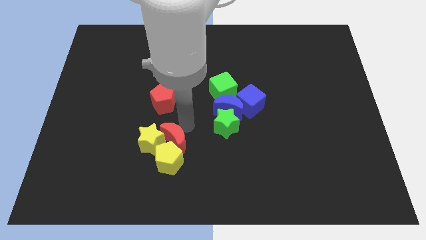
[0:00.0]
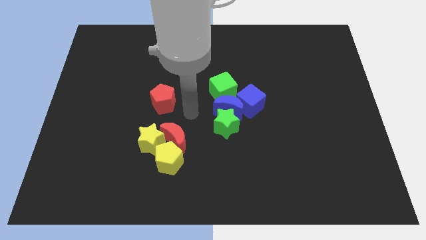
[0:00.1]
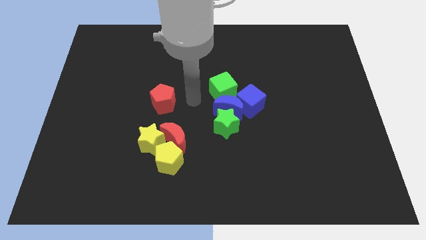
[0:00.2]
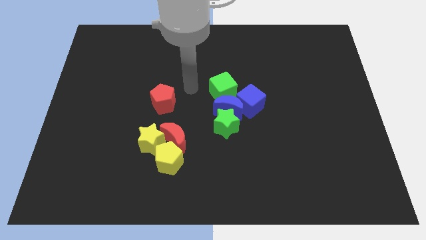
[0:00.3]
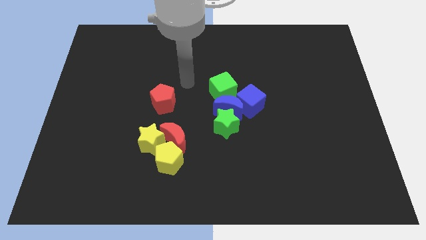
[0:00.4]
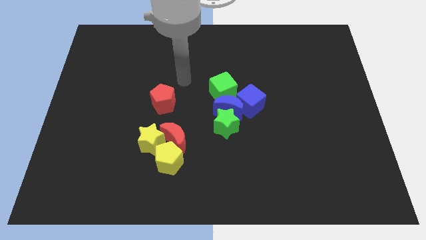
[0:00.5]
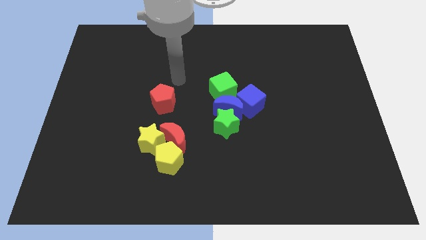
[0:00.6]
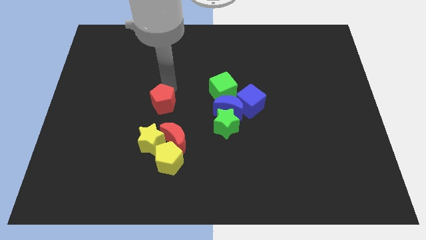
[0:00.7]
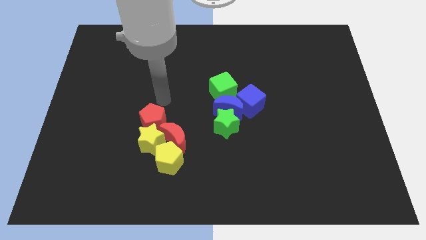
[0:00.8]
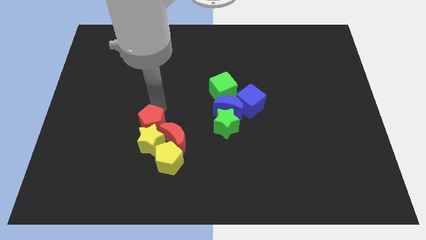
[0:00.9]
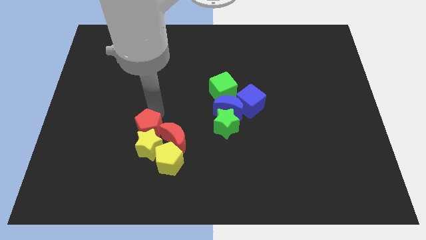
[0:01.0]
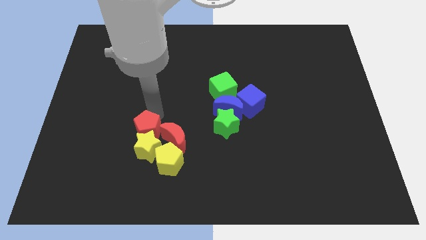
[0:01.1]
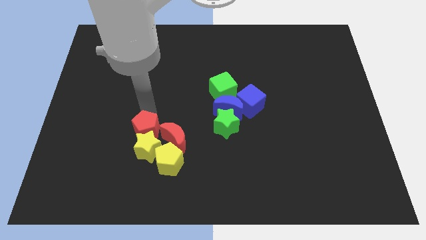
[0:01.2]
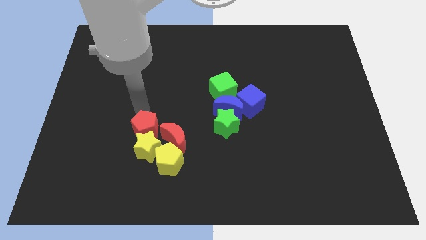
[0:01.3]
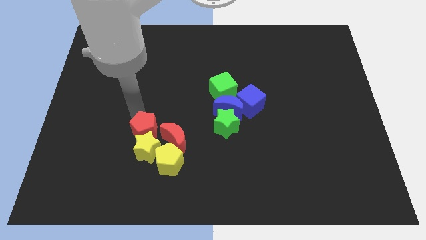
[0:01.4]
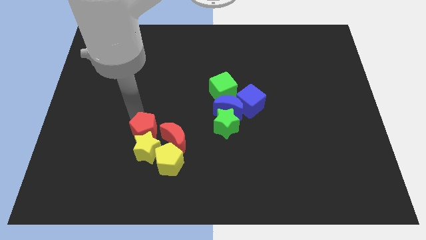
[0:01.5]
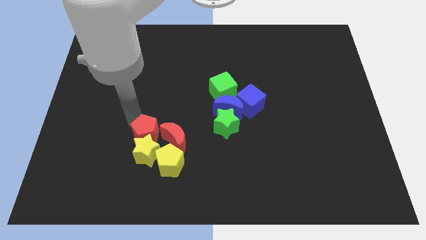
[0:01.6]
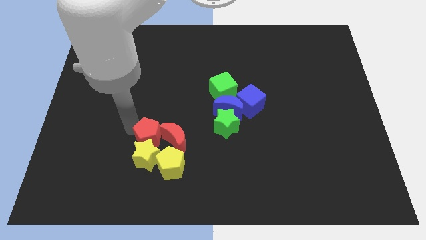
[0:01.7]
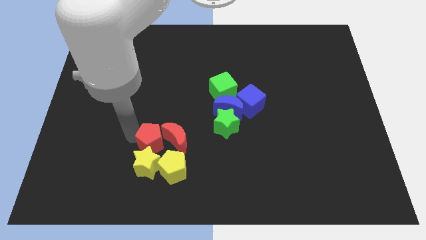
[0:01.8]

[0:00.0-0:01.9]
push the red pentagon into the yellow star

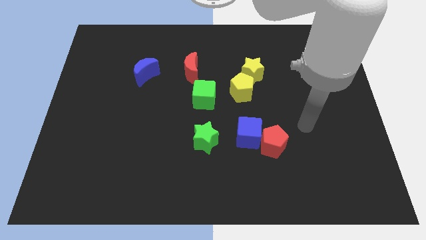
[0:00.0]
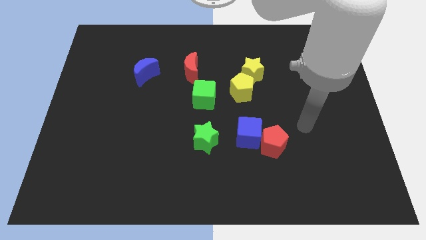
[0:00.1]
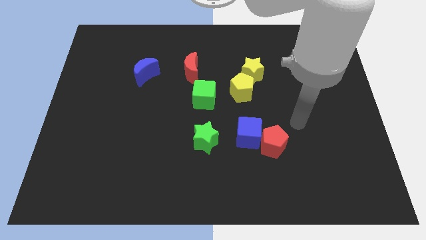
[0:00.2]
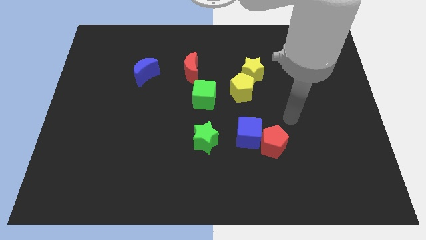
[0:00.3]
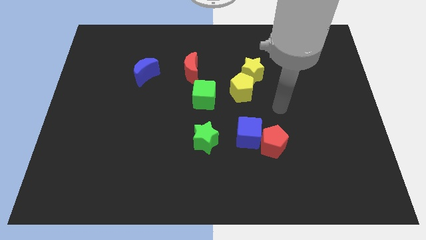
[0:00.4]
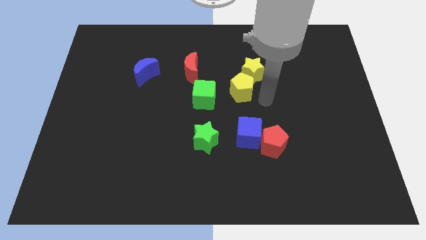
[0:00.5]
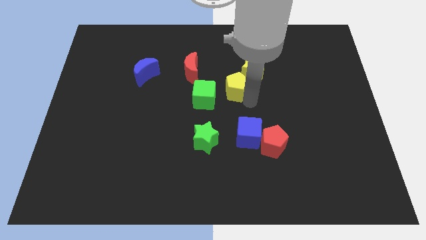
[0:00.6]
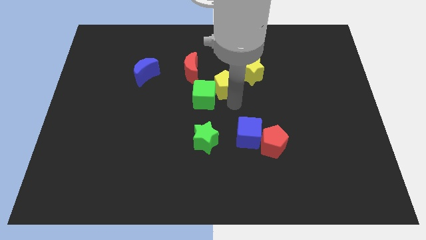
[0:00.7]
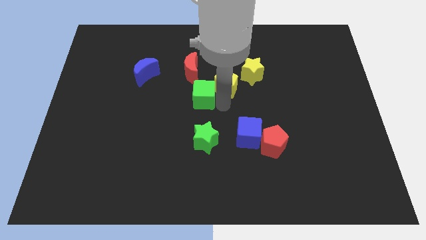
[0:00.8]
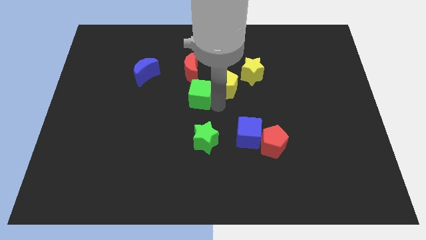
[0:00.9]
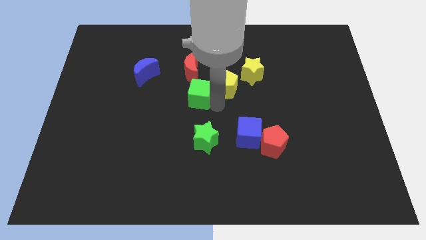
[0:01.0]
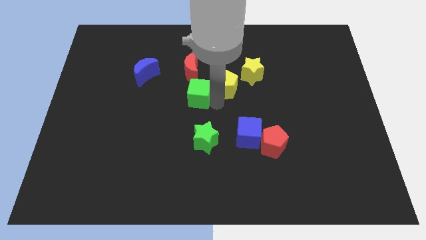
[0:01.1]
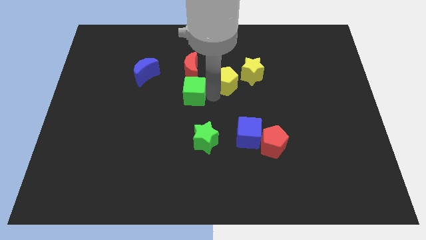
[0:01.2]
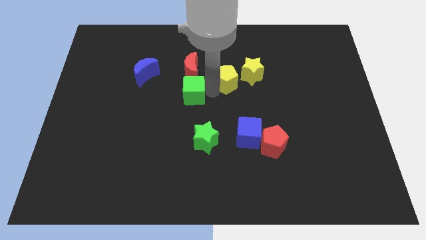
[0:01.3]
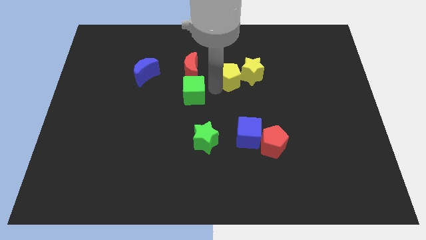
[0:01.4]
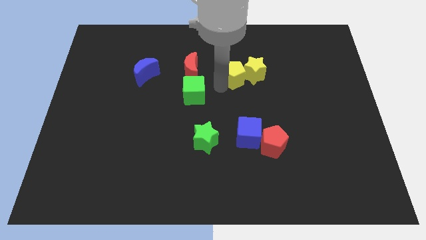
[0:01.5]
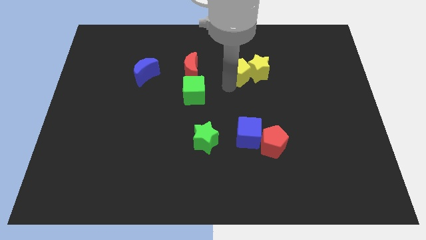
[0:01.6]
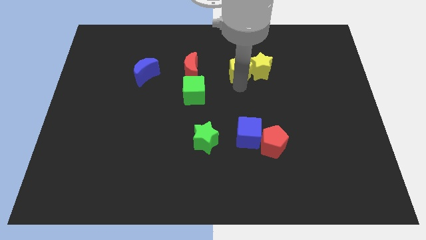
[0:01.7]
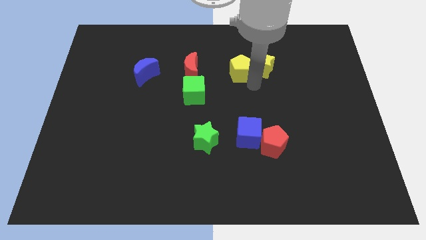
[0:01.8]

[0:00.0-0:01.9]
move the green cube below the red moon

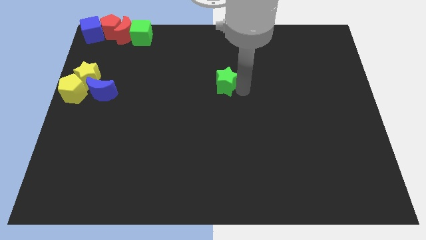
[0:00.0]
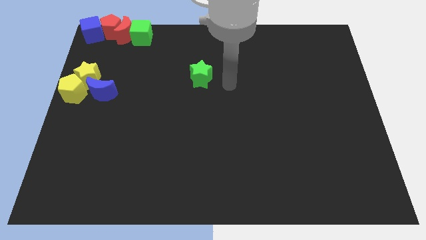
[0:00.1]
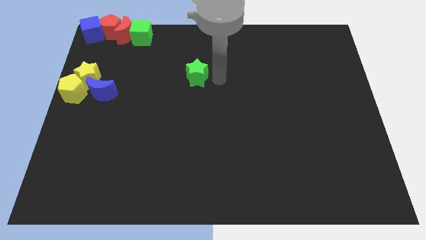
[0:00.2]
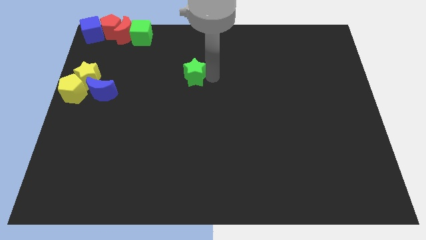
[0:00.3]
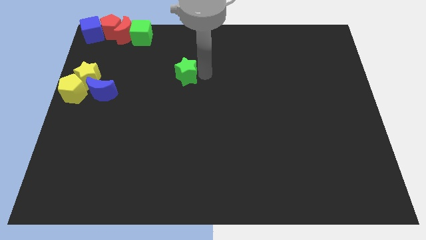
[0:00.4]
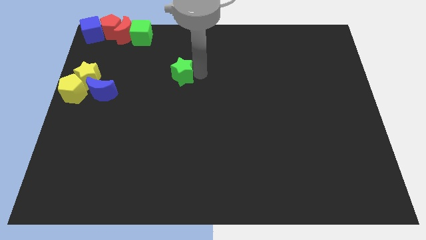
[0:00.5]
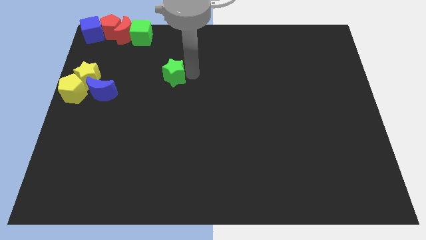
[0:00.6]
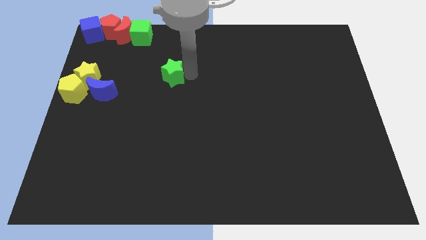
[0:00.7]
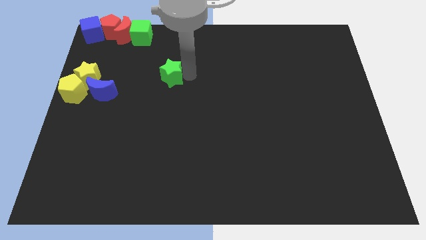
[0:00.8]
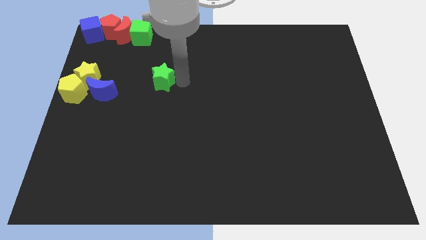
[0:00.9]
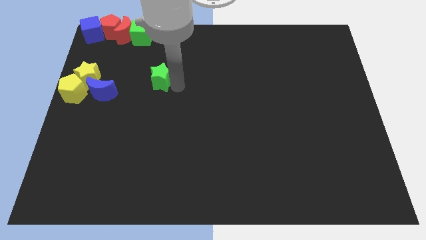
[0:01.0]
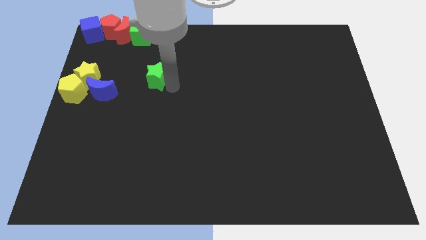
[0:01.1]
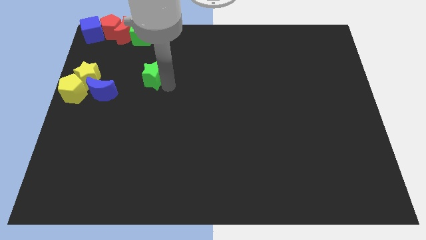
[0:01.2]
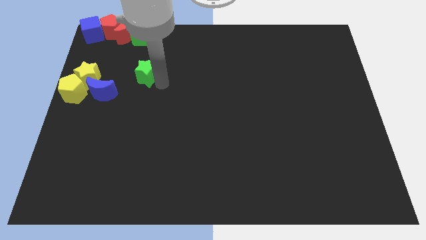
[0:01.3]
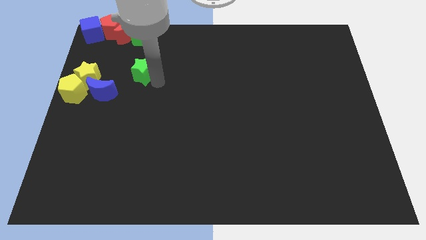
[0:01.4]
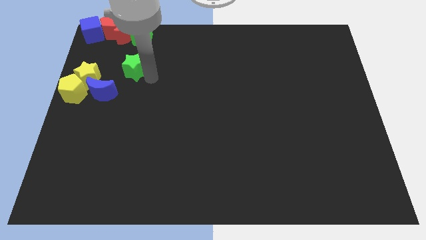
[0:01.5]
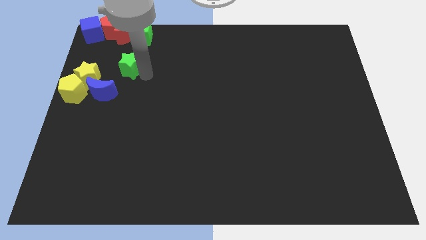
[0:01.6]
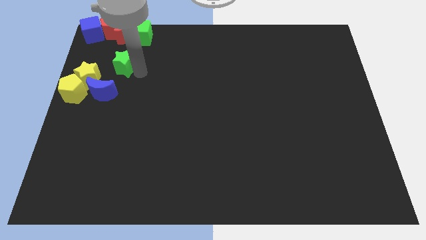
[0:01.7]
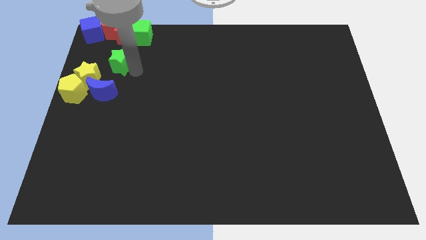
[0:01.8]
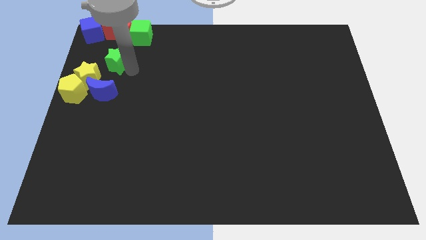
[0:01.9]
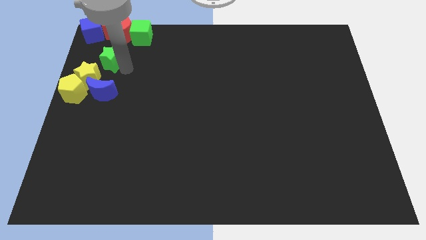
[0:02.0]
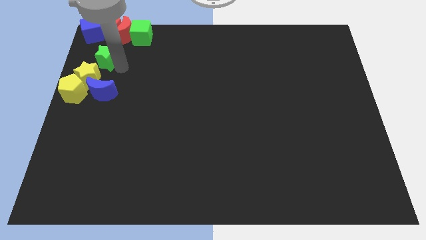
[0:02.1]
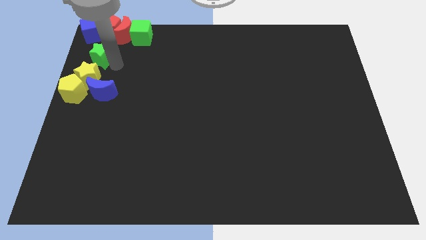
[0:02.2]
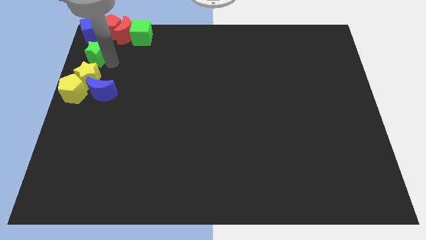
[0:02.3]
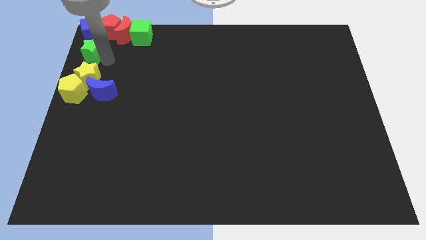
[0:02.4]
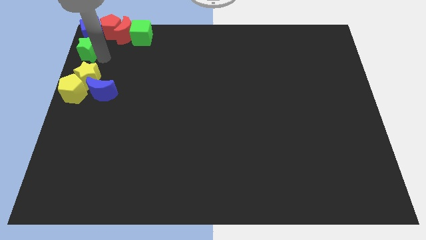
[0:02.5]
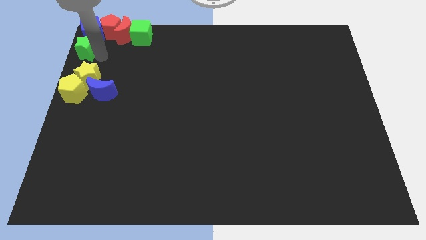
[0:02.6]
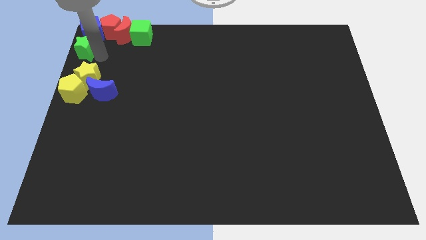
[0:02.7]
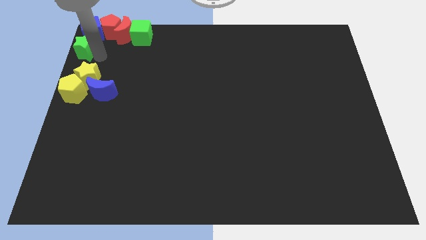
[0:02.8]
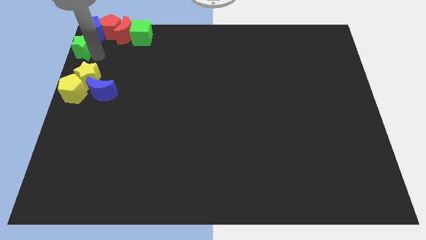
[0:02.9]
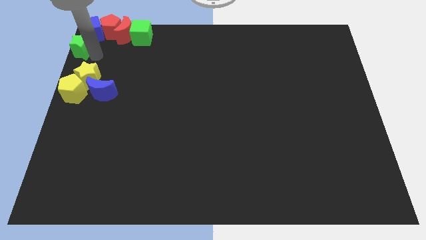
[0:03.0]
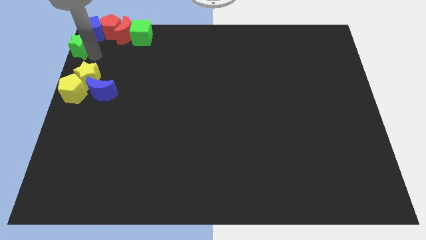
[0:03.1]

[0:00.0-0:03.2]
move the green star below the blue cube

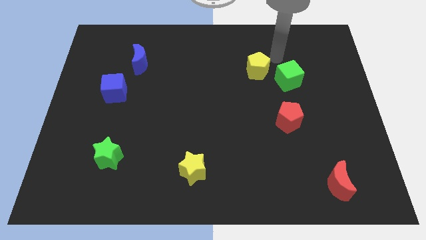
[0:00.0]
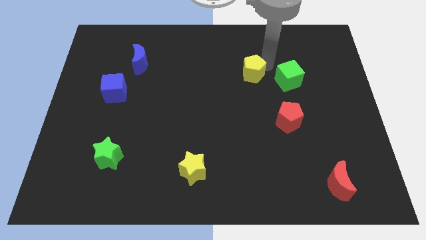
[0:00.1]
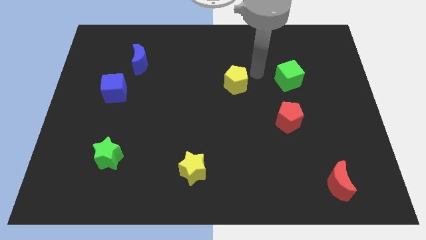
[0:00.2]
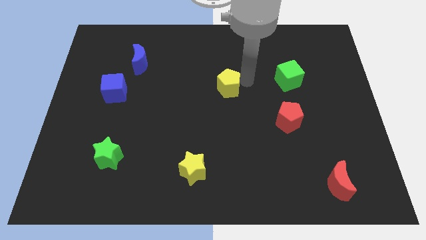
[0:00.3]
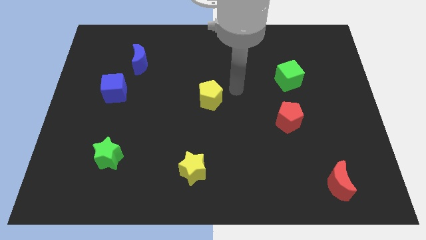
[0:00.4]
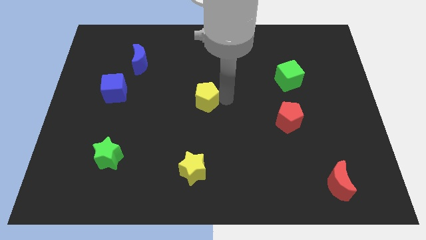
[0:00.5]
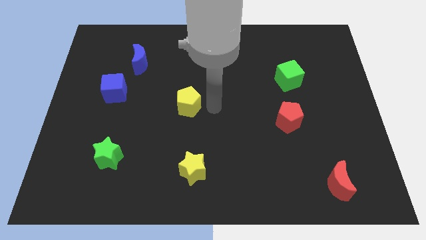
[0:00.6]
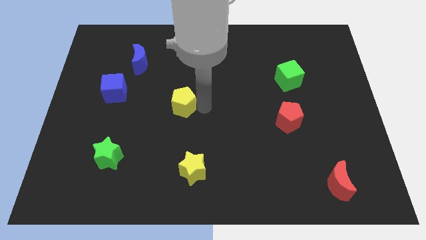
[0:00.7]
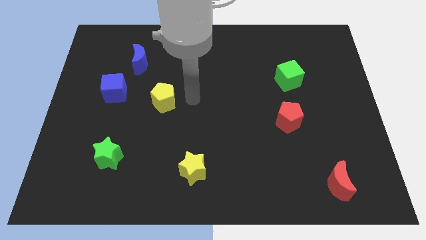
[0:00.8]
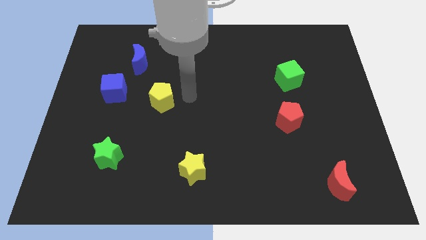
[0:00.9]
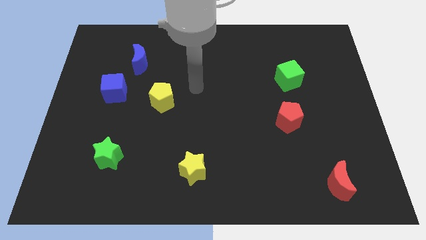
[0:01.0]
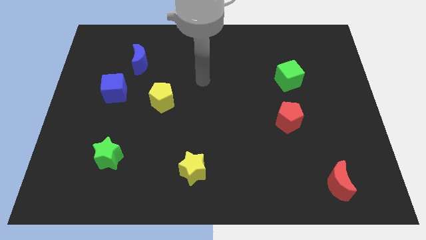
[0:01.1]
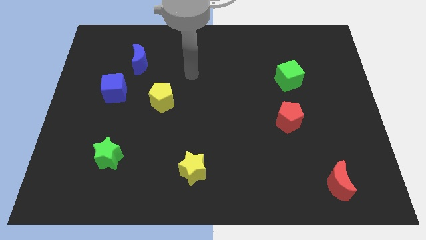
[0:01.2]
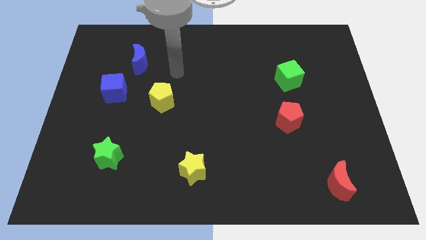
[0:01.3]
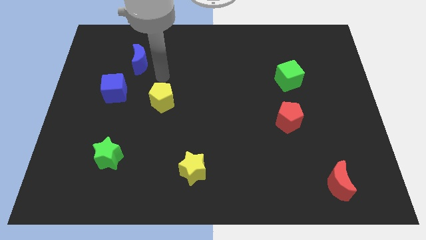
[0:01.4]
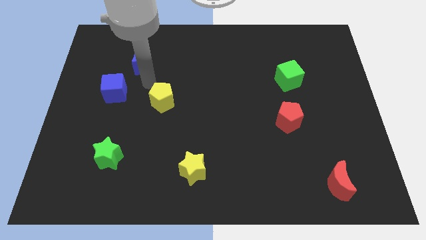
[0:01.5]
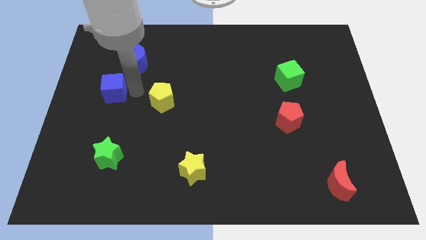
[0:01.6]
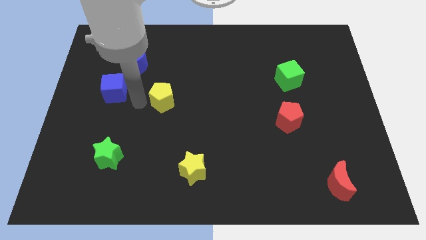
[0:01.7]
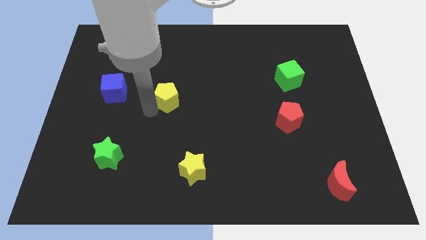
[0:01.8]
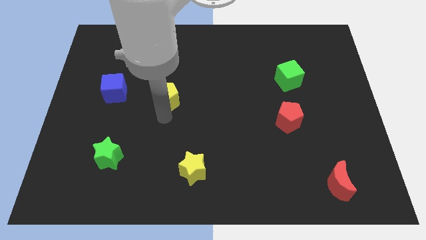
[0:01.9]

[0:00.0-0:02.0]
move the yellow pentagon diagonal above yellow star

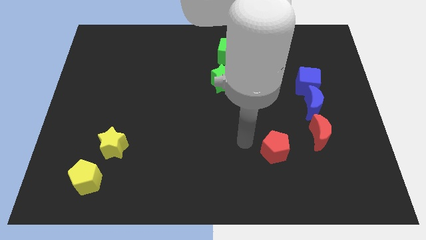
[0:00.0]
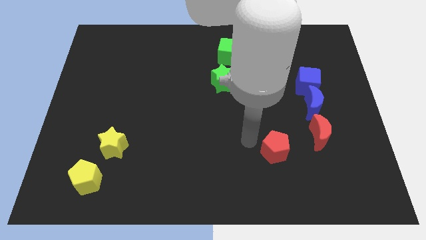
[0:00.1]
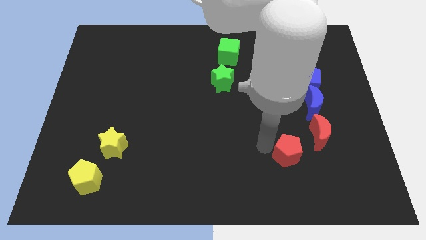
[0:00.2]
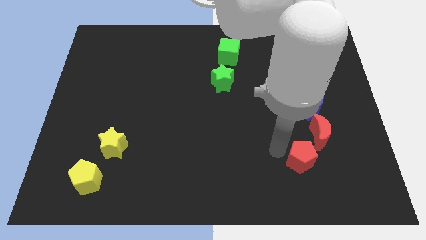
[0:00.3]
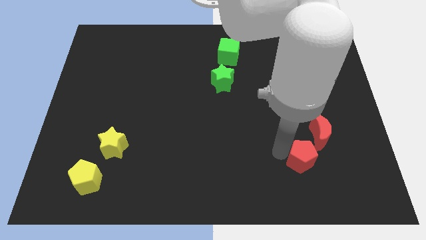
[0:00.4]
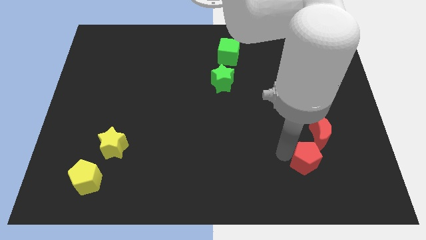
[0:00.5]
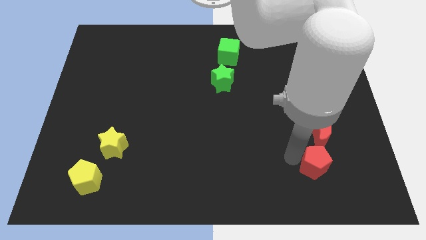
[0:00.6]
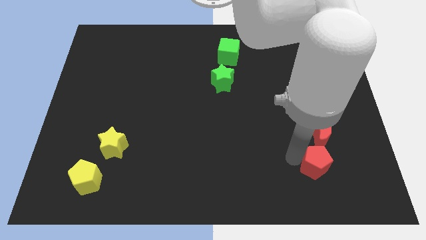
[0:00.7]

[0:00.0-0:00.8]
put the red pentagon below the red crescent
